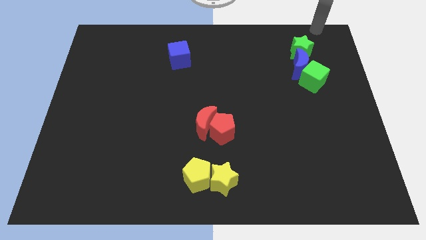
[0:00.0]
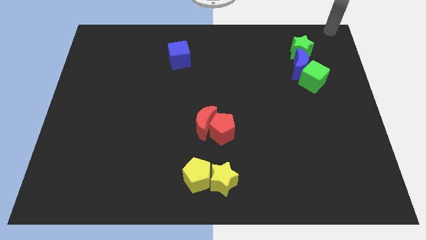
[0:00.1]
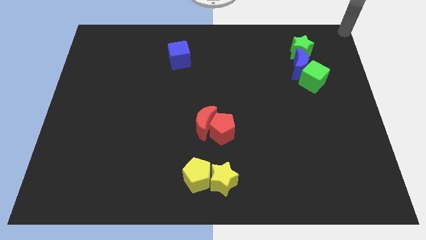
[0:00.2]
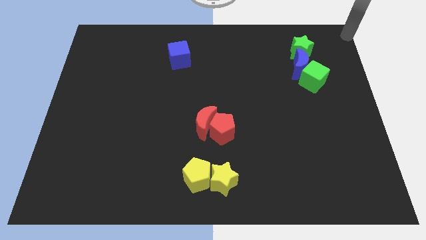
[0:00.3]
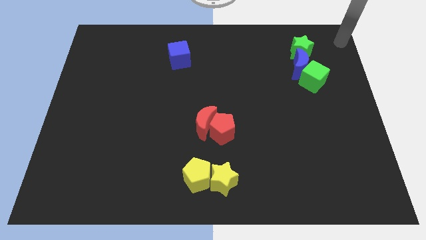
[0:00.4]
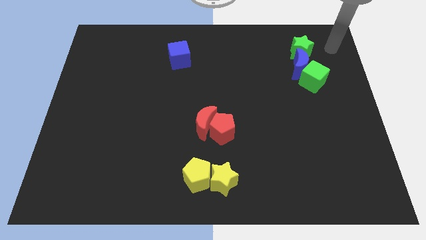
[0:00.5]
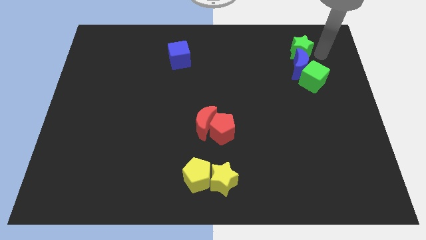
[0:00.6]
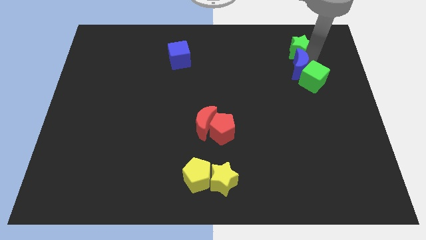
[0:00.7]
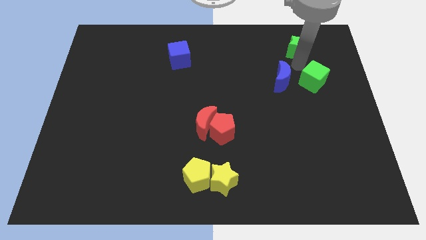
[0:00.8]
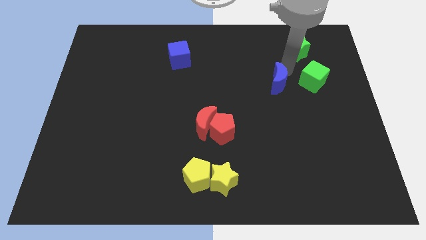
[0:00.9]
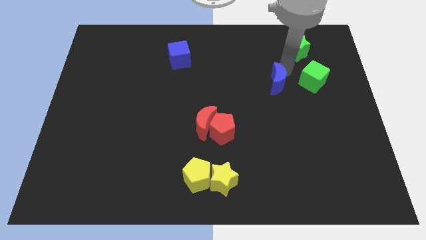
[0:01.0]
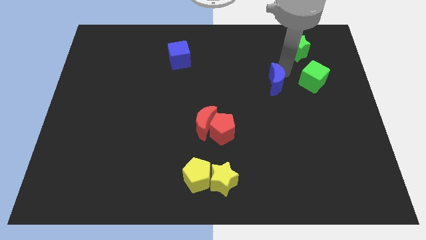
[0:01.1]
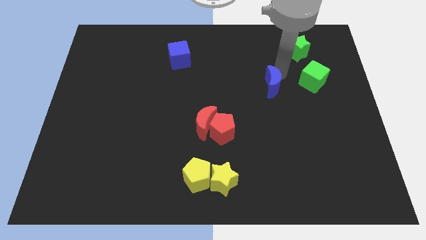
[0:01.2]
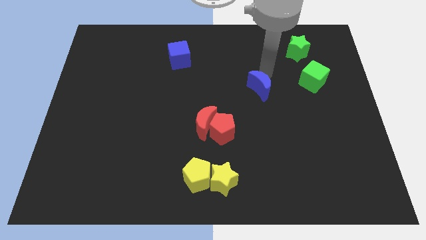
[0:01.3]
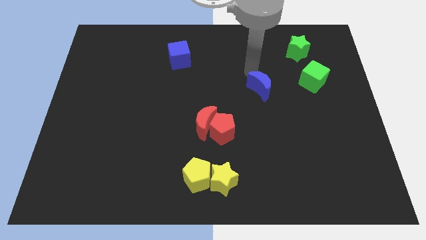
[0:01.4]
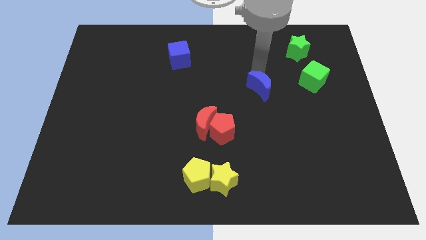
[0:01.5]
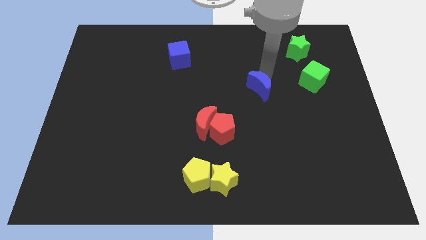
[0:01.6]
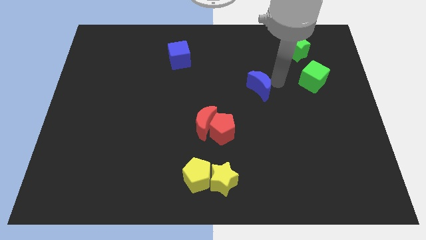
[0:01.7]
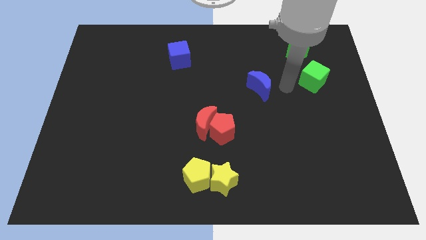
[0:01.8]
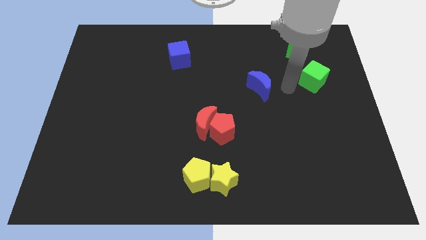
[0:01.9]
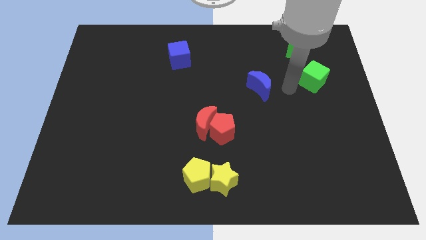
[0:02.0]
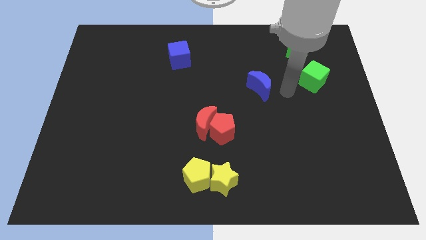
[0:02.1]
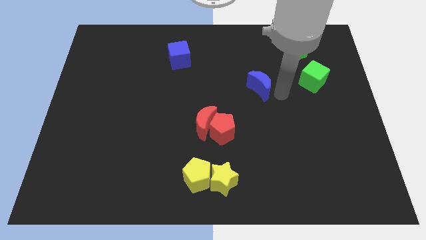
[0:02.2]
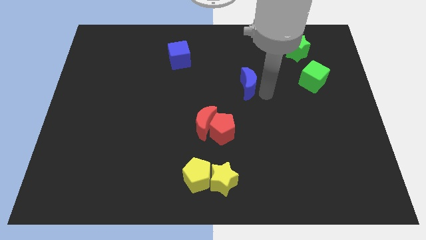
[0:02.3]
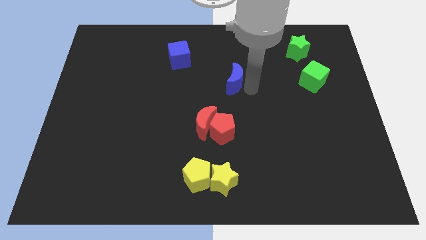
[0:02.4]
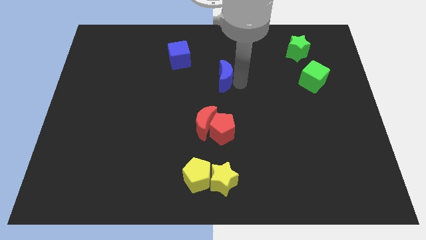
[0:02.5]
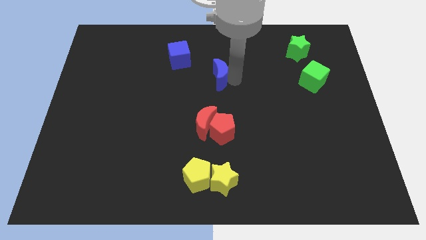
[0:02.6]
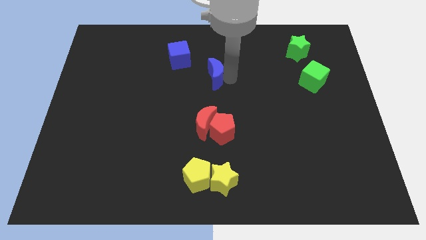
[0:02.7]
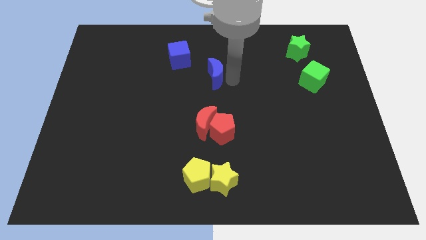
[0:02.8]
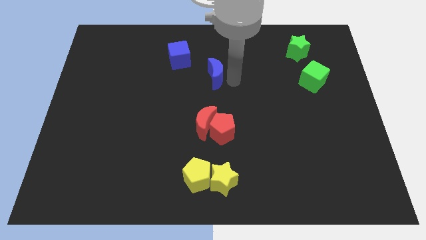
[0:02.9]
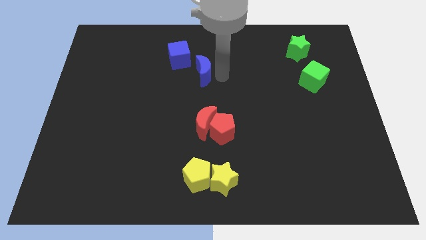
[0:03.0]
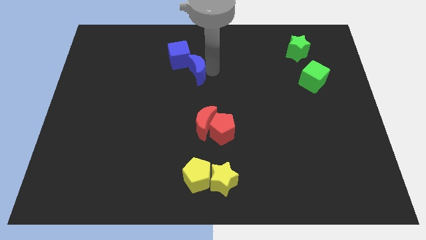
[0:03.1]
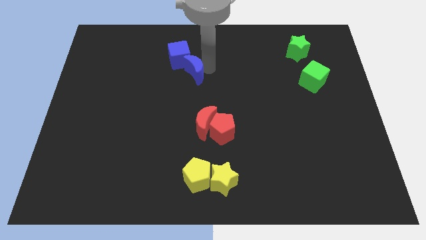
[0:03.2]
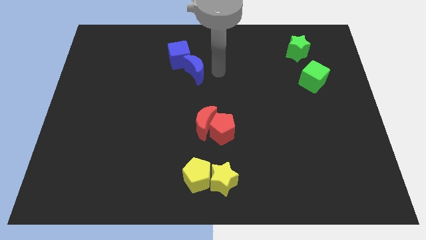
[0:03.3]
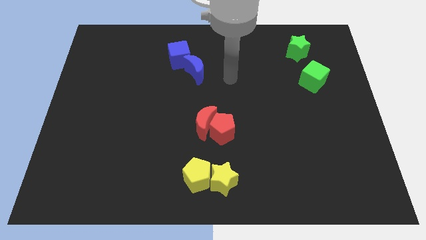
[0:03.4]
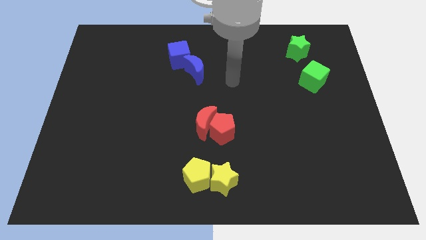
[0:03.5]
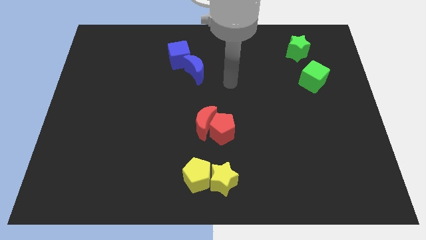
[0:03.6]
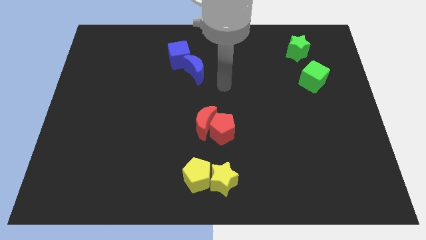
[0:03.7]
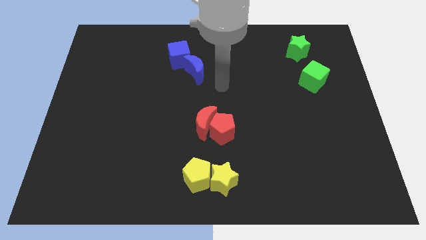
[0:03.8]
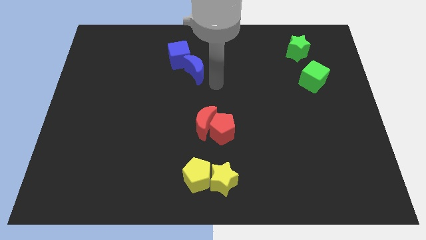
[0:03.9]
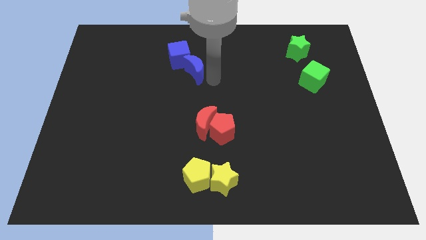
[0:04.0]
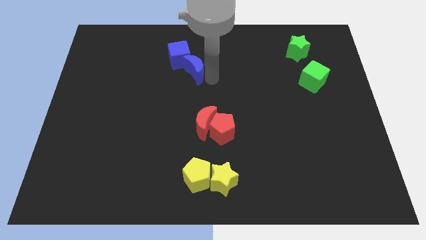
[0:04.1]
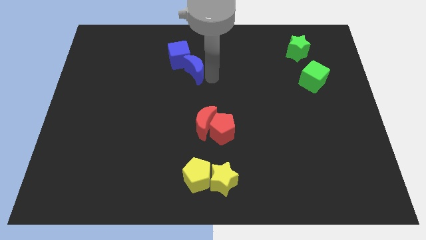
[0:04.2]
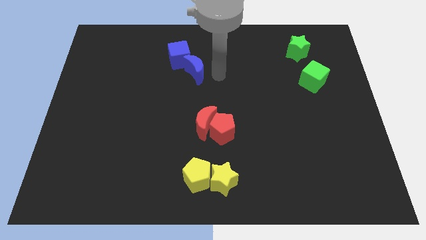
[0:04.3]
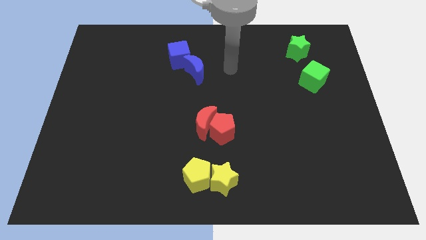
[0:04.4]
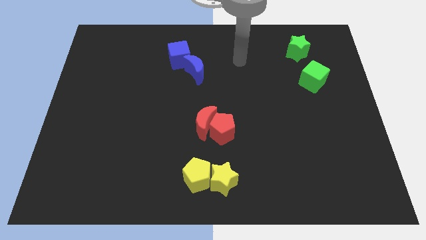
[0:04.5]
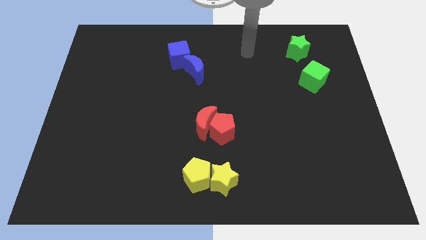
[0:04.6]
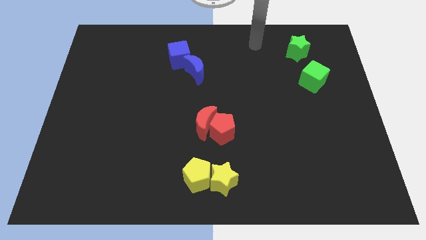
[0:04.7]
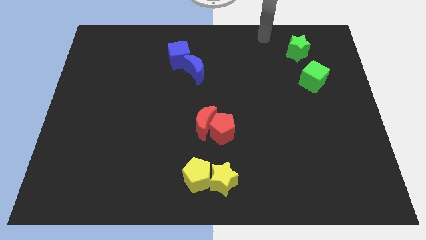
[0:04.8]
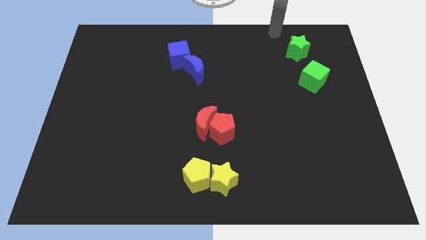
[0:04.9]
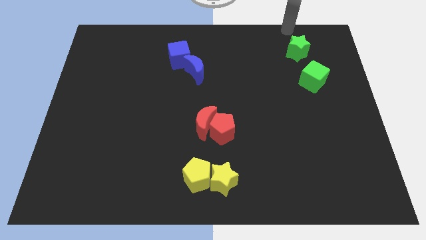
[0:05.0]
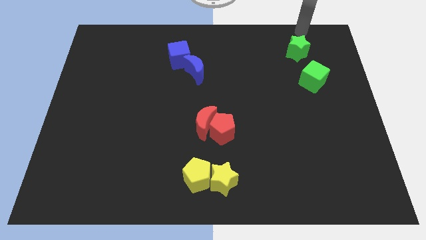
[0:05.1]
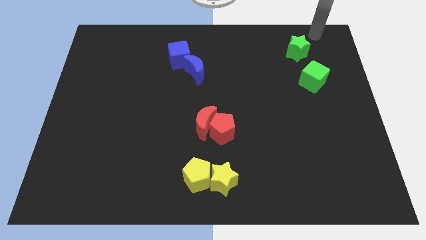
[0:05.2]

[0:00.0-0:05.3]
place the blue moon underneath the blue cube

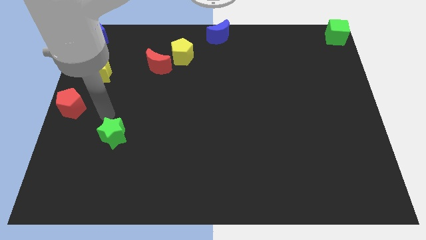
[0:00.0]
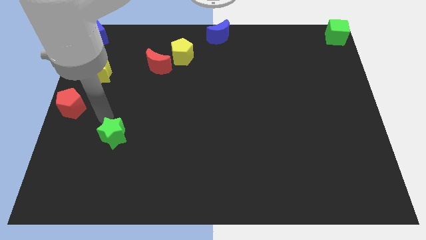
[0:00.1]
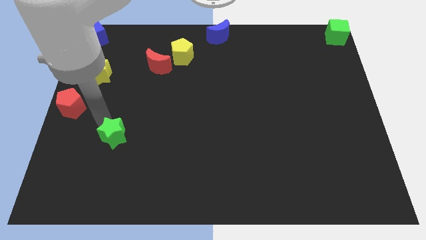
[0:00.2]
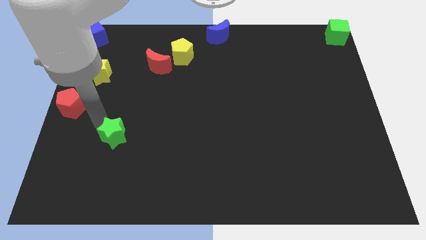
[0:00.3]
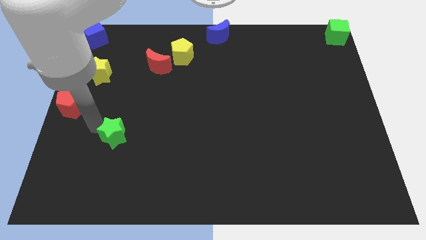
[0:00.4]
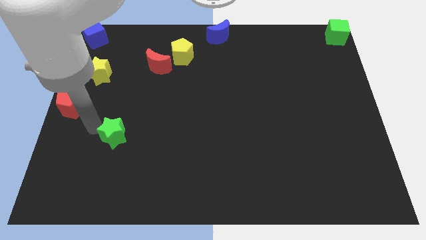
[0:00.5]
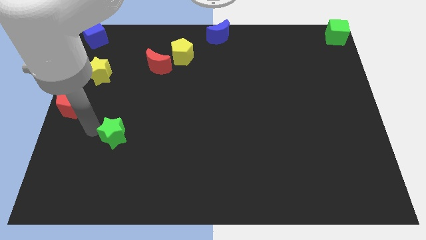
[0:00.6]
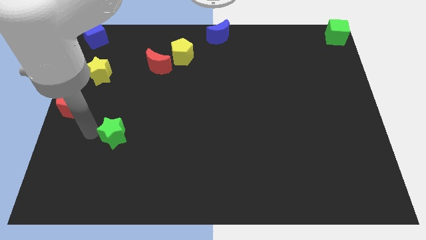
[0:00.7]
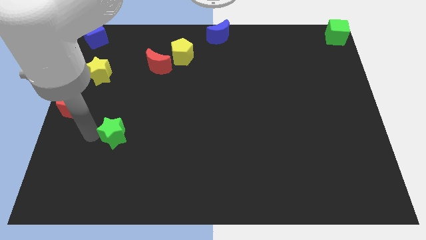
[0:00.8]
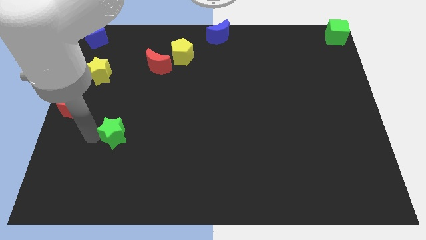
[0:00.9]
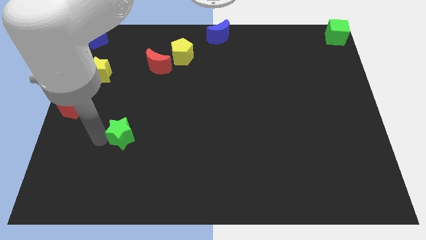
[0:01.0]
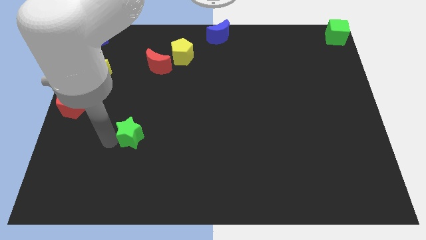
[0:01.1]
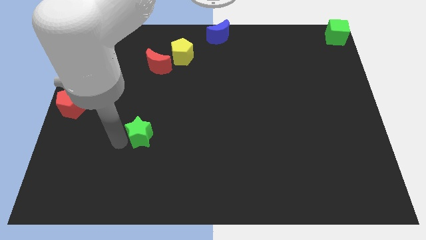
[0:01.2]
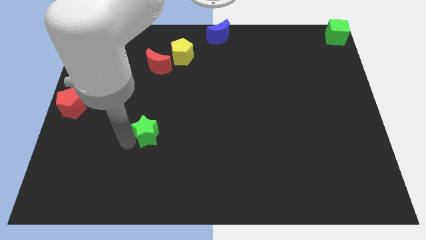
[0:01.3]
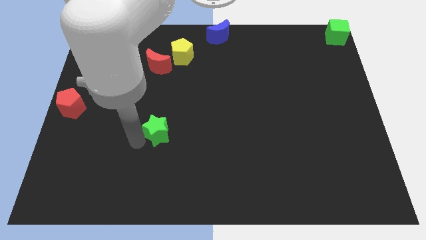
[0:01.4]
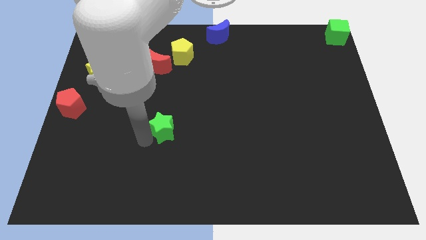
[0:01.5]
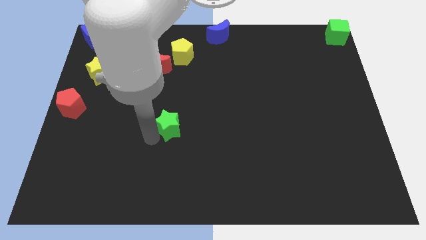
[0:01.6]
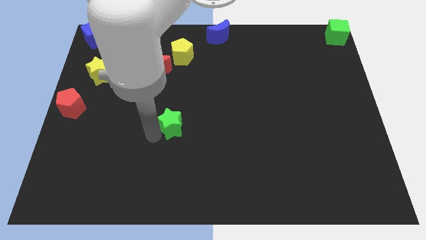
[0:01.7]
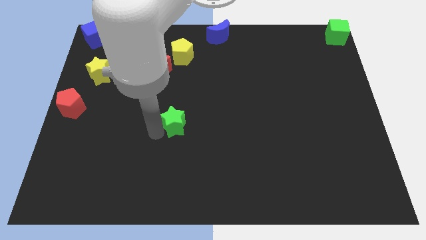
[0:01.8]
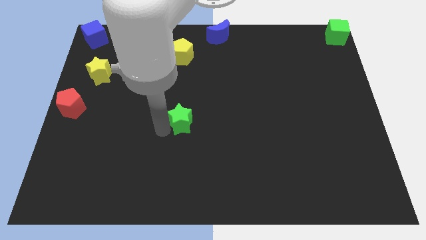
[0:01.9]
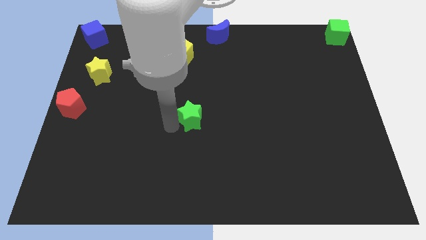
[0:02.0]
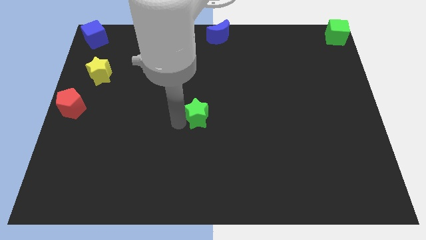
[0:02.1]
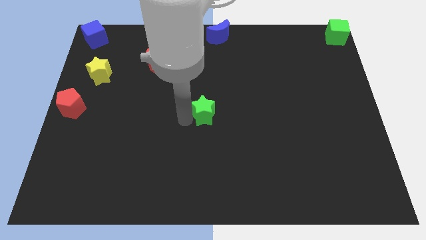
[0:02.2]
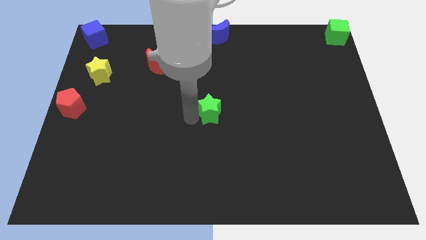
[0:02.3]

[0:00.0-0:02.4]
push the green star to the center of the board

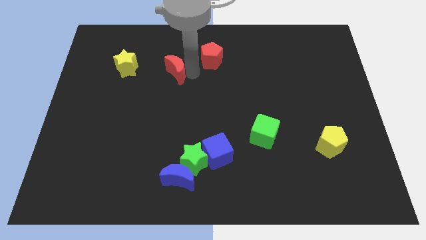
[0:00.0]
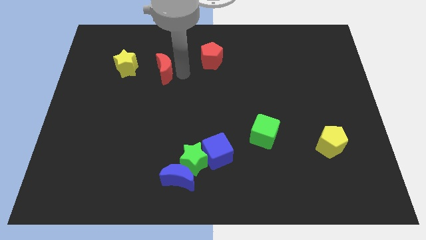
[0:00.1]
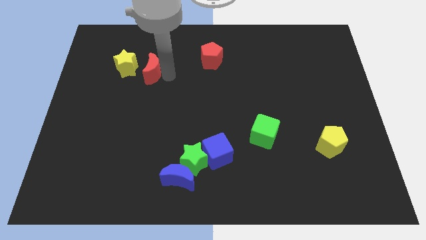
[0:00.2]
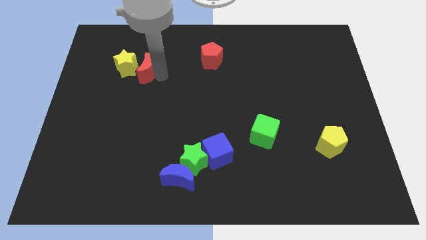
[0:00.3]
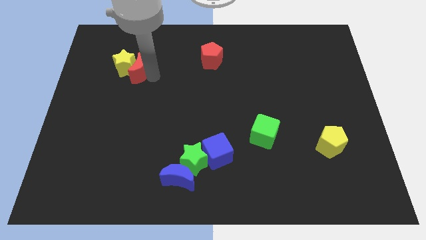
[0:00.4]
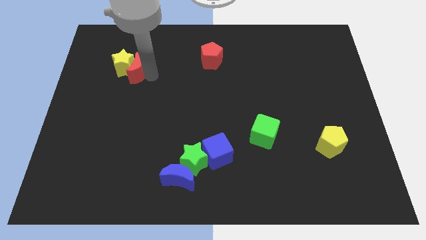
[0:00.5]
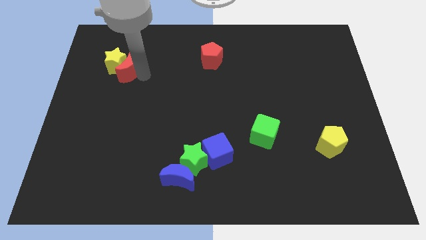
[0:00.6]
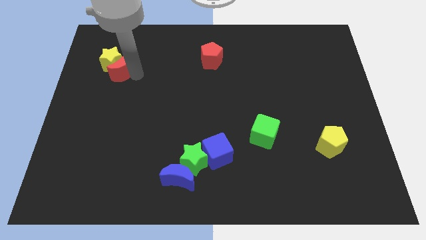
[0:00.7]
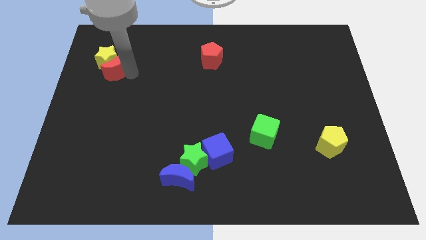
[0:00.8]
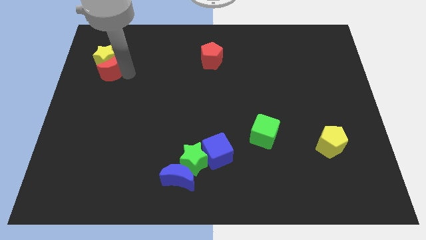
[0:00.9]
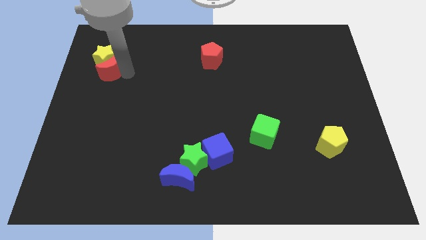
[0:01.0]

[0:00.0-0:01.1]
move the red crescent into the yellow star

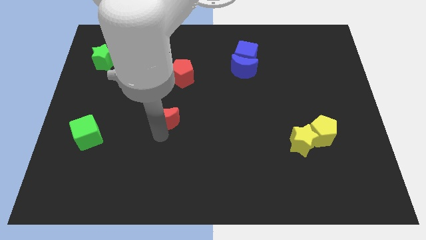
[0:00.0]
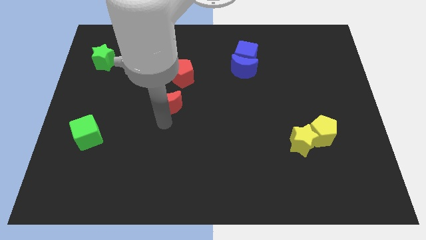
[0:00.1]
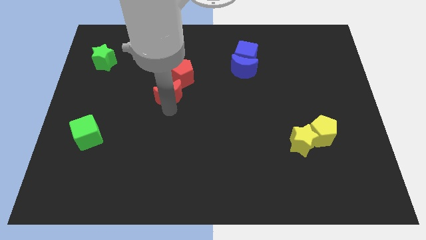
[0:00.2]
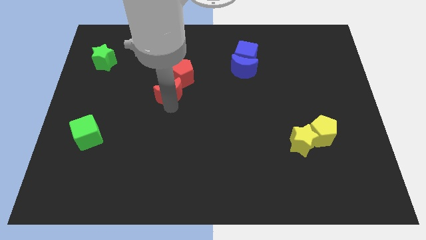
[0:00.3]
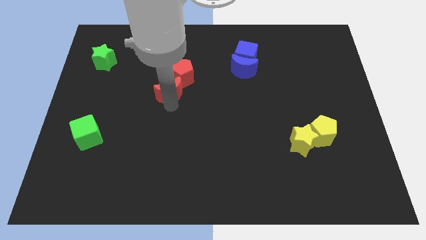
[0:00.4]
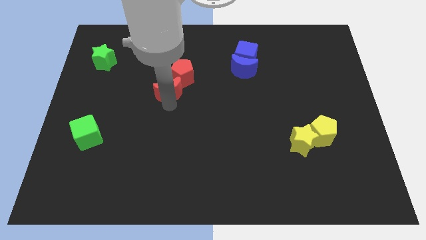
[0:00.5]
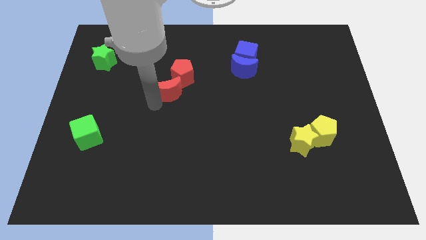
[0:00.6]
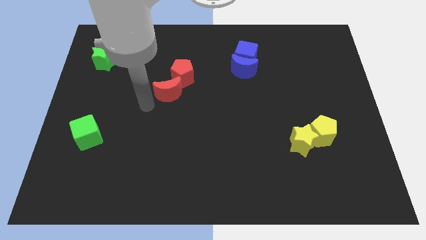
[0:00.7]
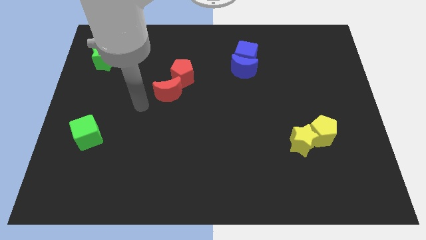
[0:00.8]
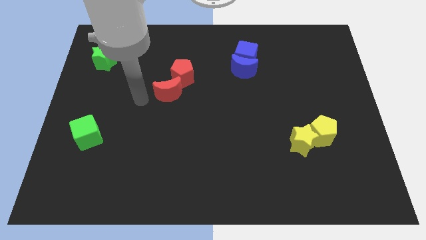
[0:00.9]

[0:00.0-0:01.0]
move the red moon below the red pentagon
